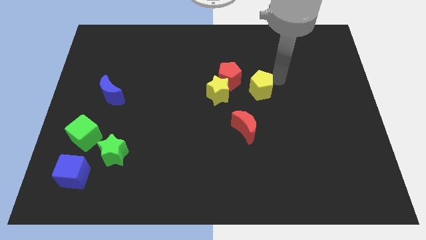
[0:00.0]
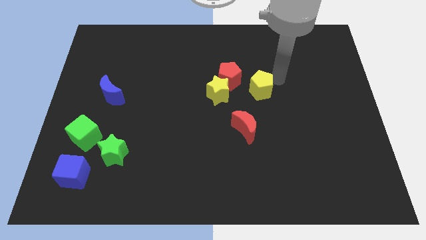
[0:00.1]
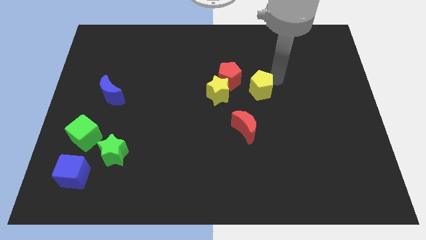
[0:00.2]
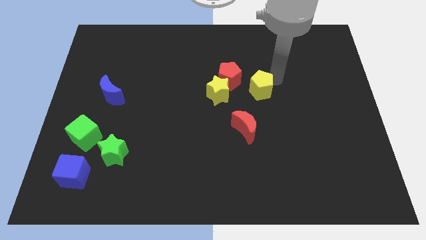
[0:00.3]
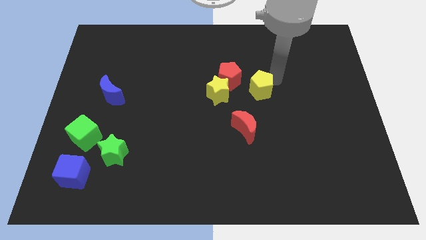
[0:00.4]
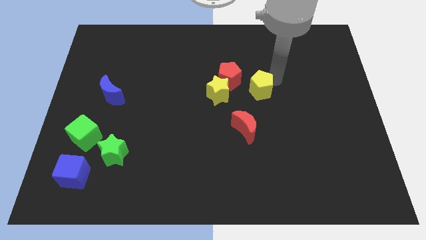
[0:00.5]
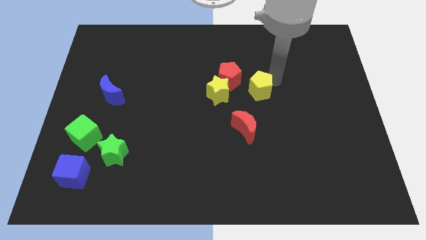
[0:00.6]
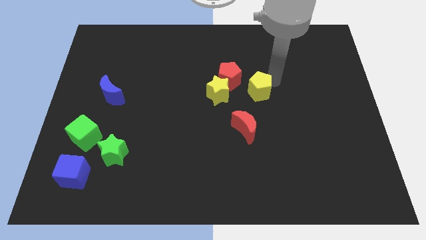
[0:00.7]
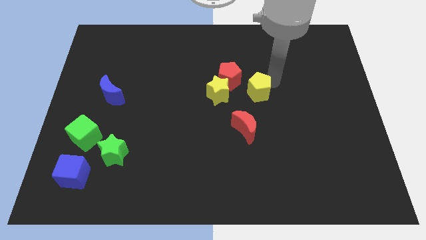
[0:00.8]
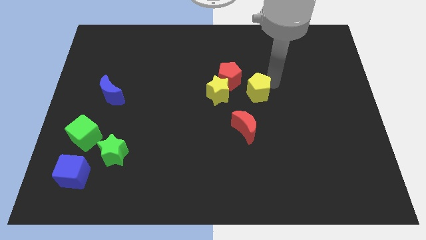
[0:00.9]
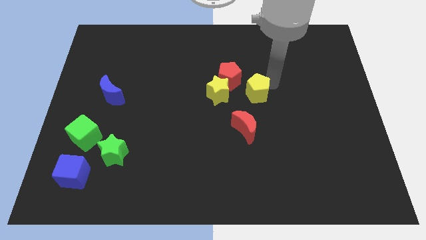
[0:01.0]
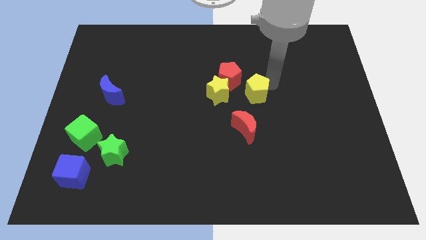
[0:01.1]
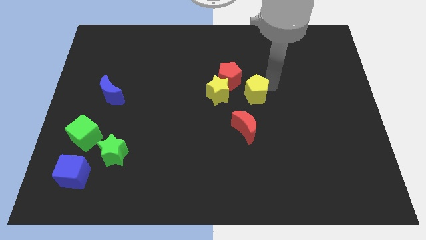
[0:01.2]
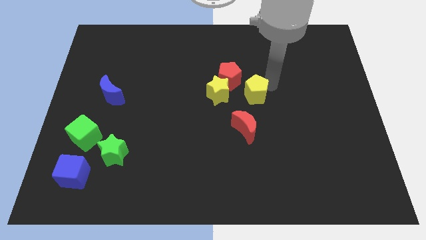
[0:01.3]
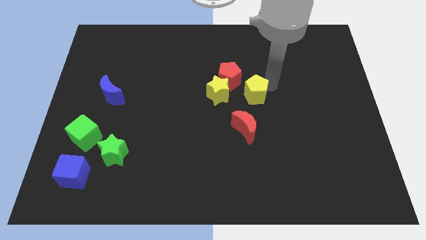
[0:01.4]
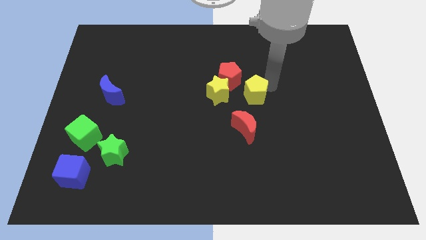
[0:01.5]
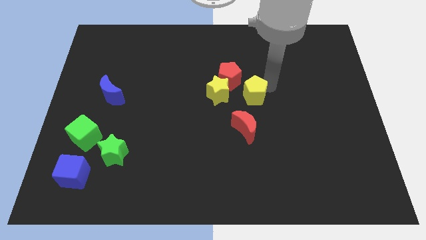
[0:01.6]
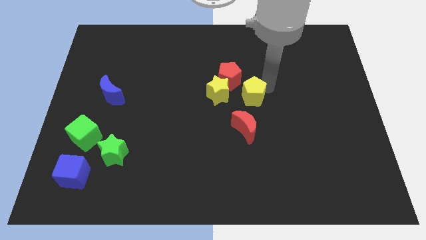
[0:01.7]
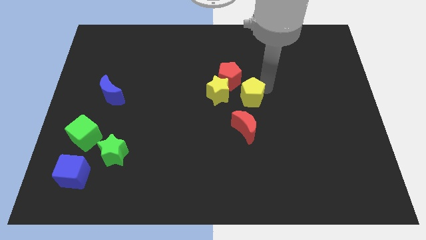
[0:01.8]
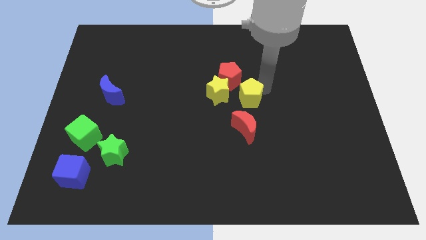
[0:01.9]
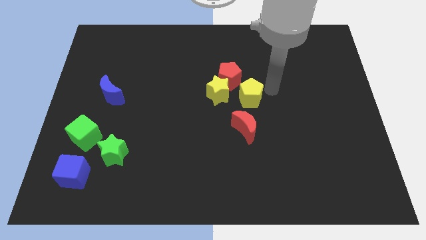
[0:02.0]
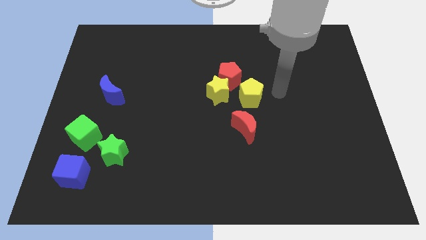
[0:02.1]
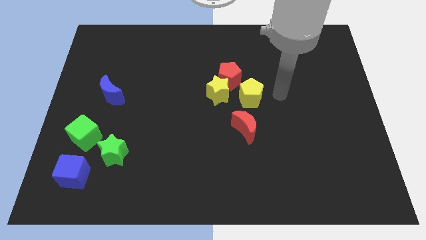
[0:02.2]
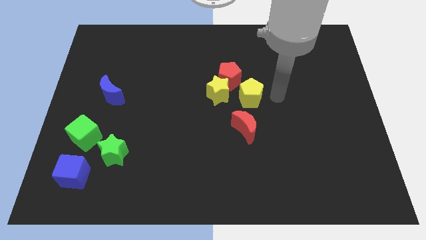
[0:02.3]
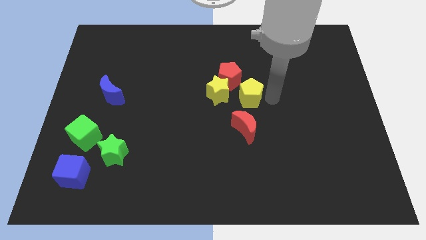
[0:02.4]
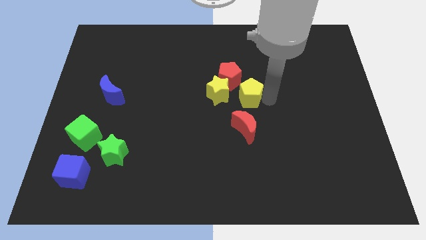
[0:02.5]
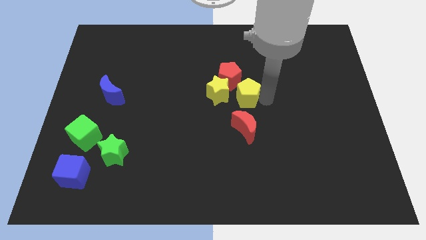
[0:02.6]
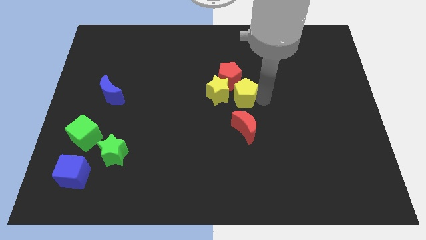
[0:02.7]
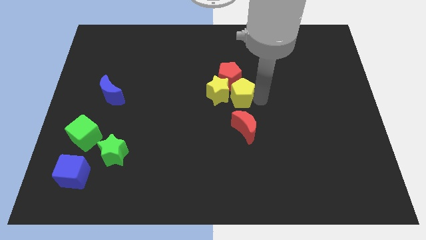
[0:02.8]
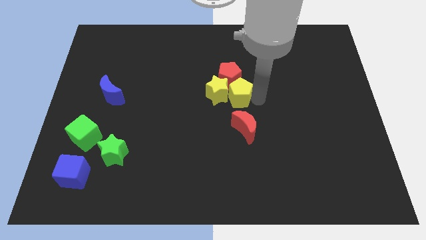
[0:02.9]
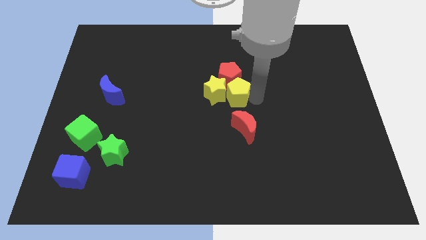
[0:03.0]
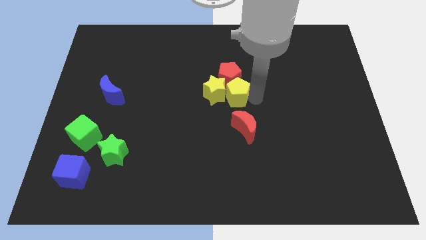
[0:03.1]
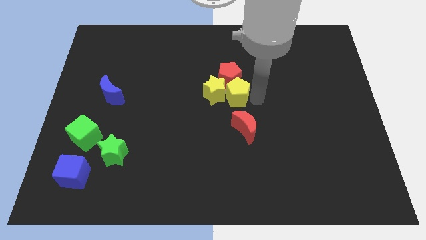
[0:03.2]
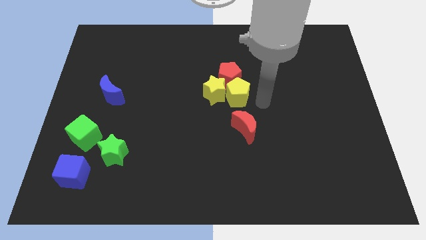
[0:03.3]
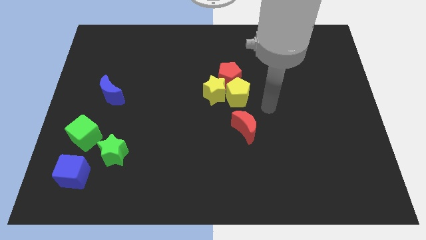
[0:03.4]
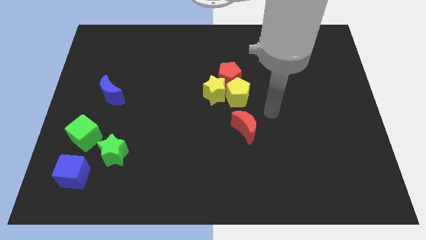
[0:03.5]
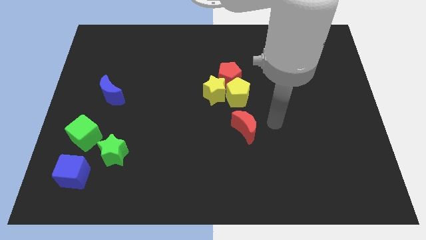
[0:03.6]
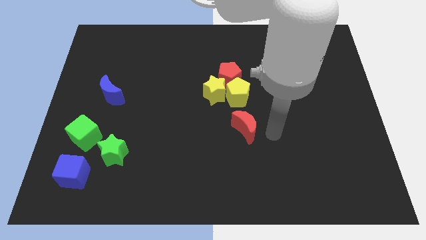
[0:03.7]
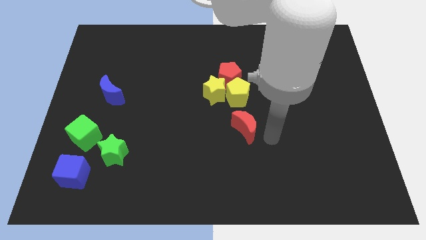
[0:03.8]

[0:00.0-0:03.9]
push yellow pentagon into yellow star and red pentagon

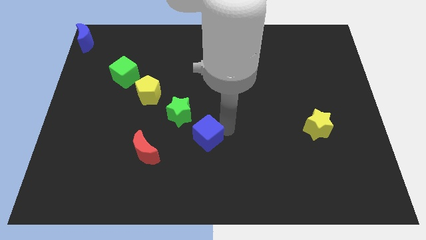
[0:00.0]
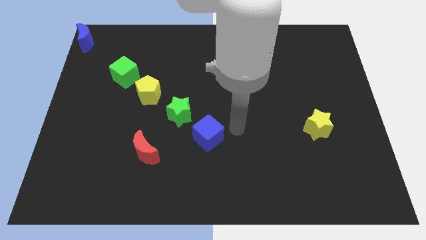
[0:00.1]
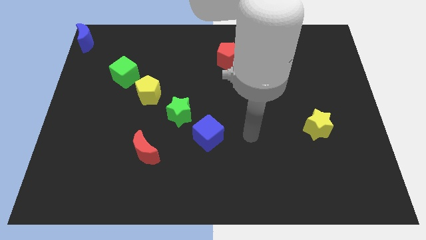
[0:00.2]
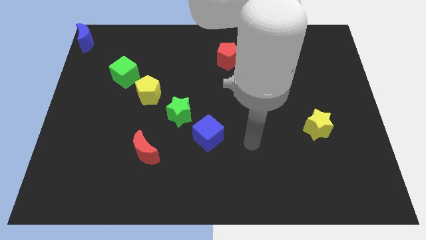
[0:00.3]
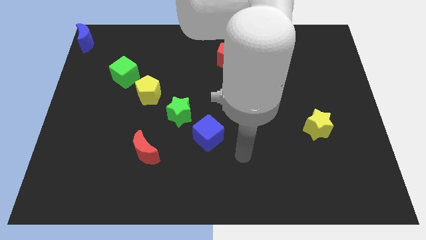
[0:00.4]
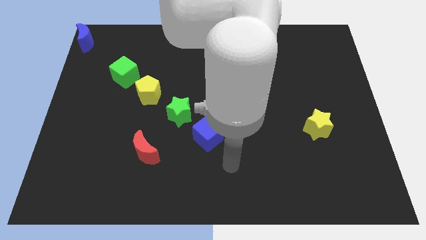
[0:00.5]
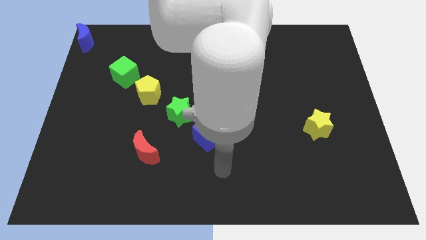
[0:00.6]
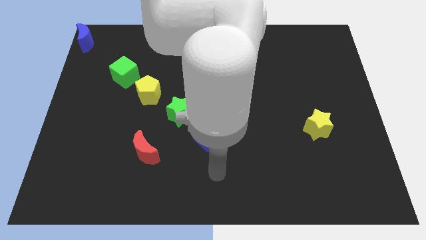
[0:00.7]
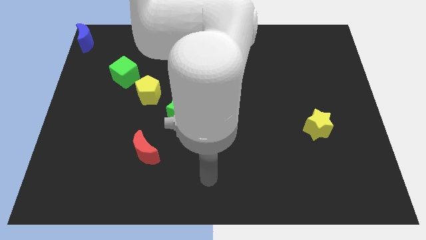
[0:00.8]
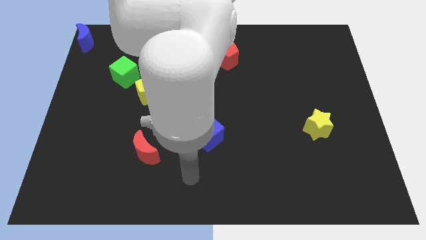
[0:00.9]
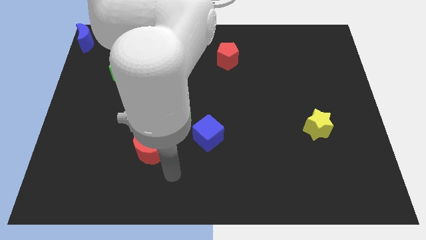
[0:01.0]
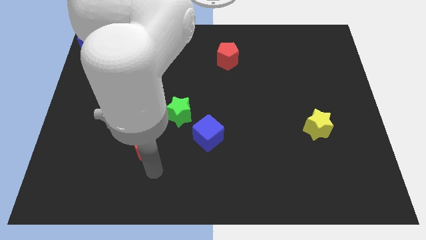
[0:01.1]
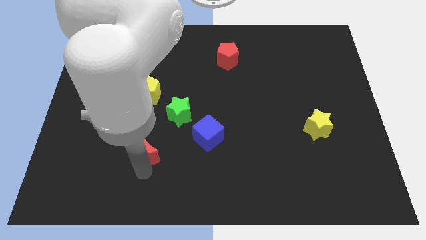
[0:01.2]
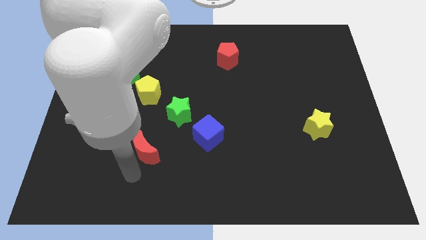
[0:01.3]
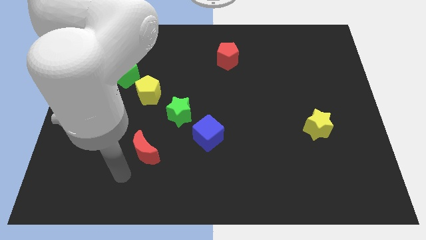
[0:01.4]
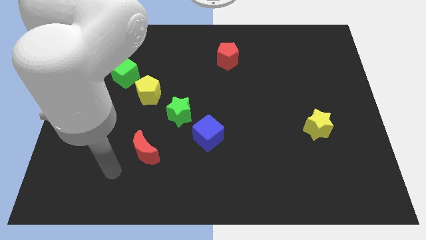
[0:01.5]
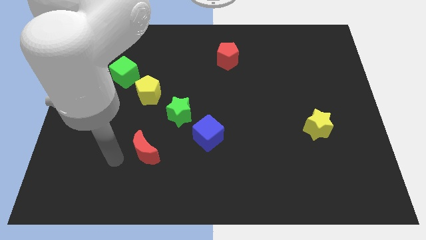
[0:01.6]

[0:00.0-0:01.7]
move your arm to left side of red crescent

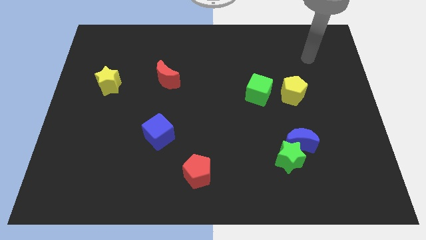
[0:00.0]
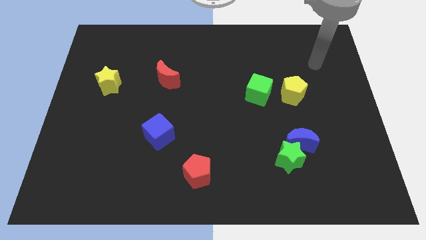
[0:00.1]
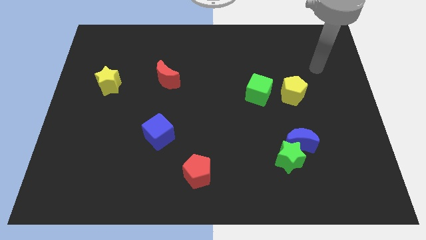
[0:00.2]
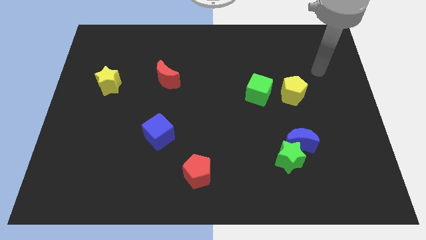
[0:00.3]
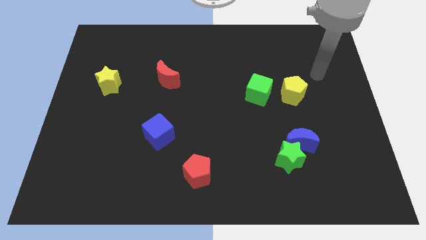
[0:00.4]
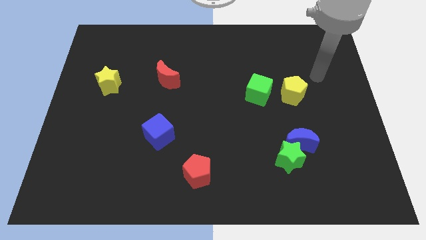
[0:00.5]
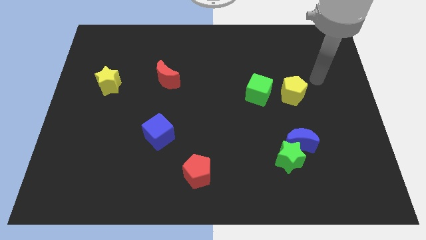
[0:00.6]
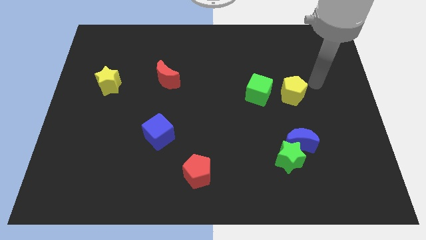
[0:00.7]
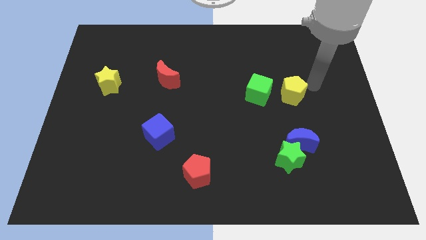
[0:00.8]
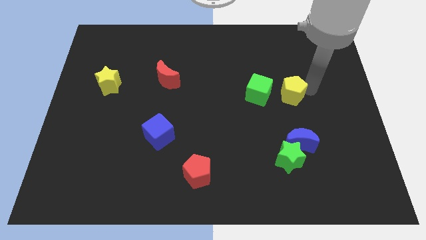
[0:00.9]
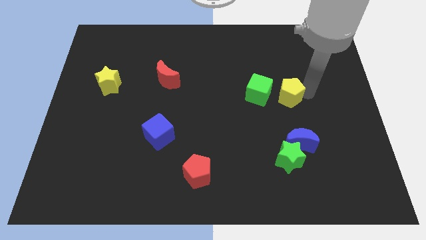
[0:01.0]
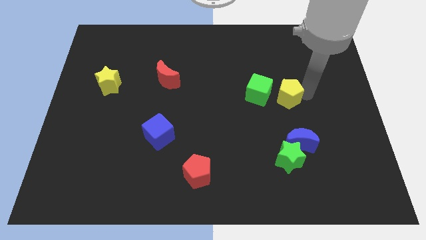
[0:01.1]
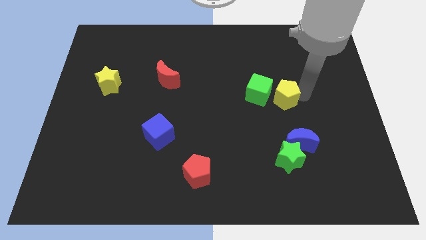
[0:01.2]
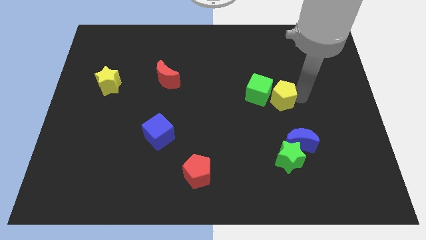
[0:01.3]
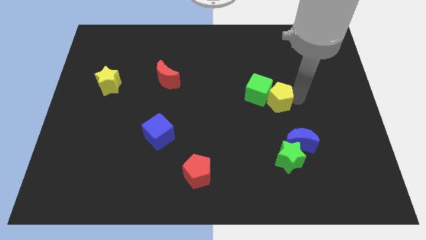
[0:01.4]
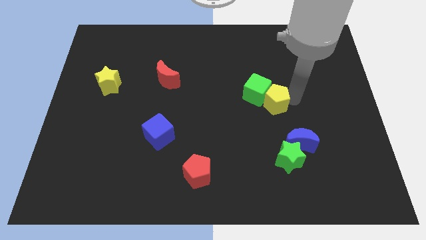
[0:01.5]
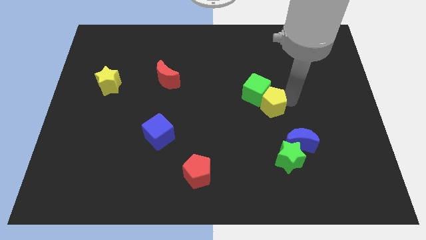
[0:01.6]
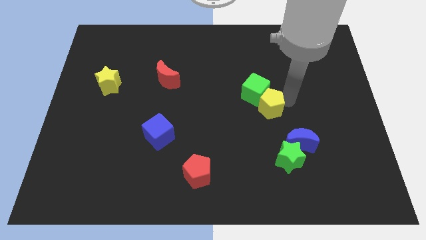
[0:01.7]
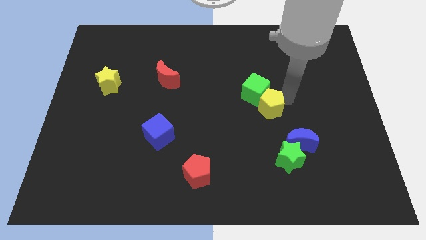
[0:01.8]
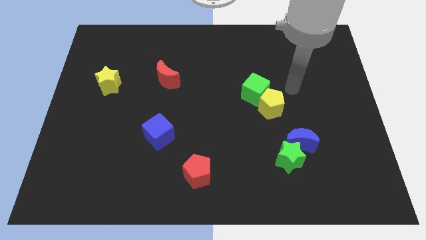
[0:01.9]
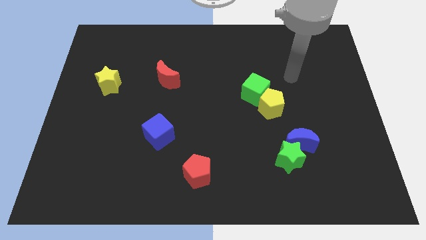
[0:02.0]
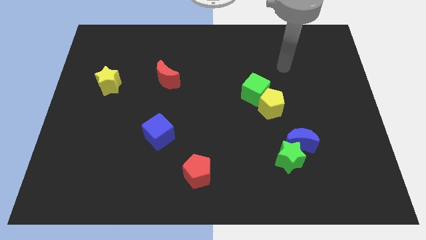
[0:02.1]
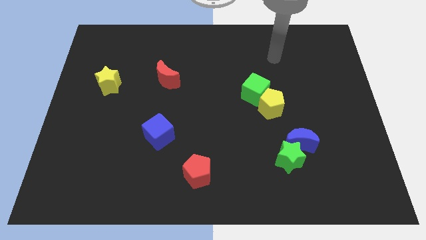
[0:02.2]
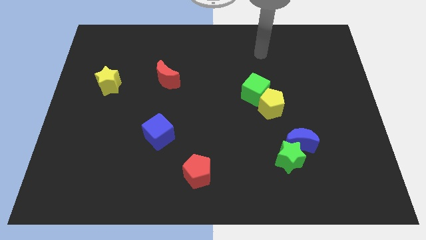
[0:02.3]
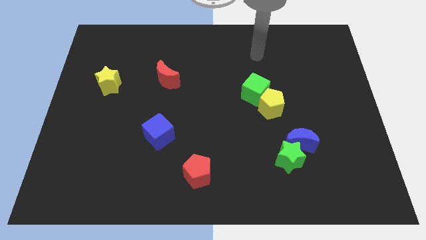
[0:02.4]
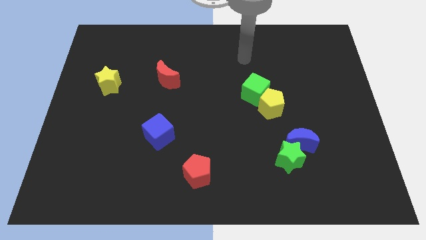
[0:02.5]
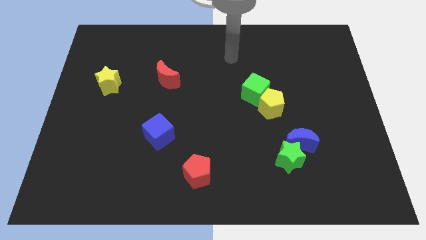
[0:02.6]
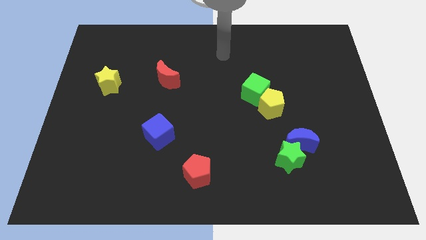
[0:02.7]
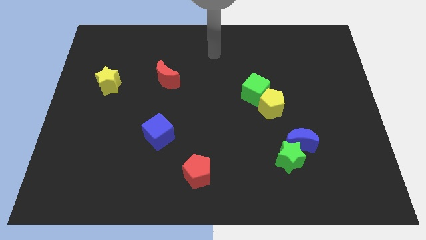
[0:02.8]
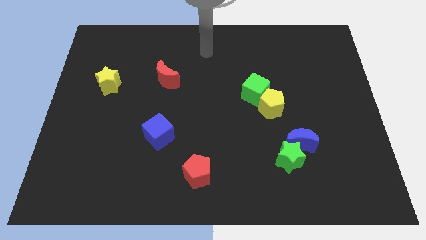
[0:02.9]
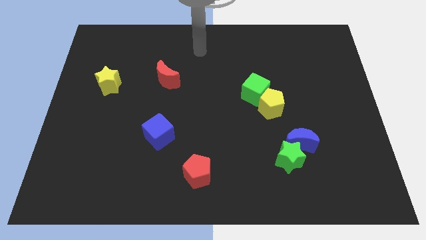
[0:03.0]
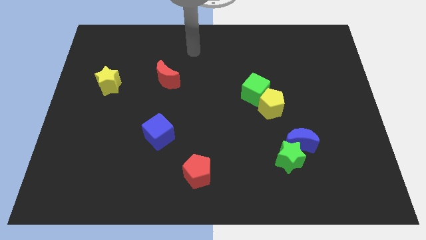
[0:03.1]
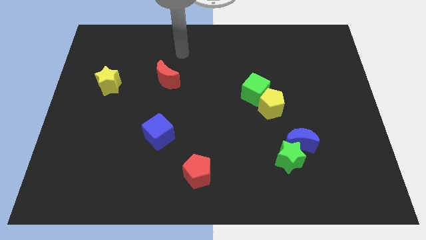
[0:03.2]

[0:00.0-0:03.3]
push the yellow pentagon into the green cube
